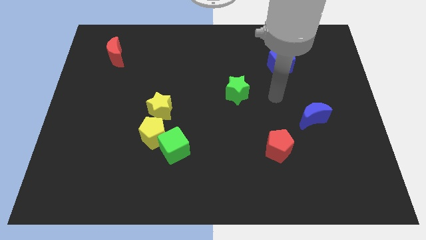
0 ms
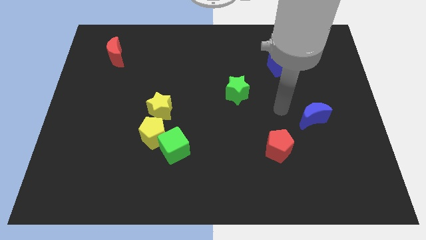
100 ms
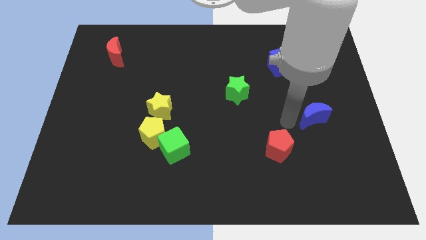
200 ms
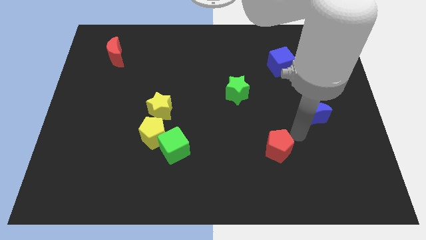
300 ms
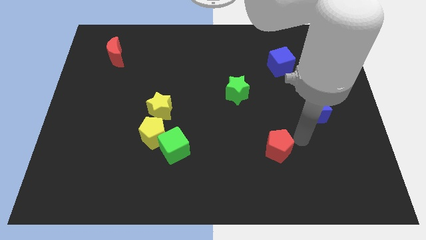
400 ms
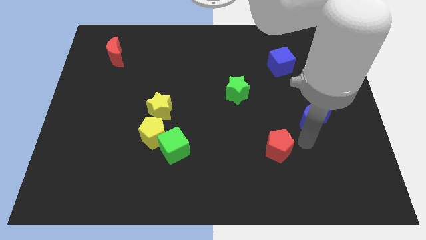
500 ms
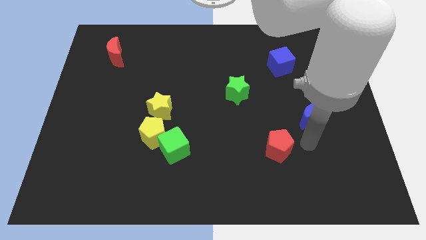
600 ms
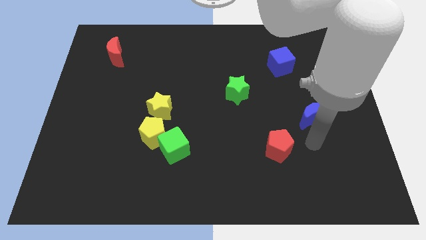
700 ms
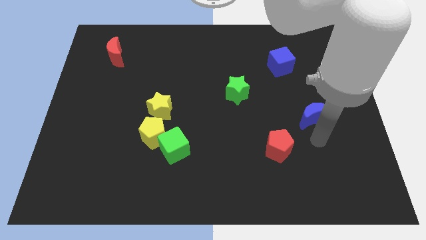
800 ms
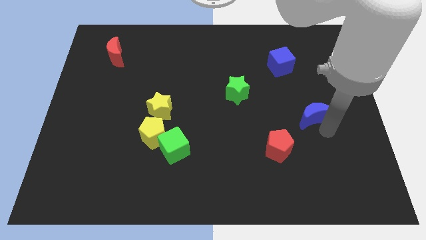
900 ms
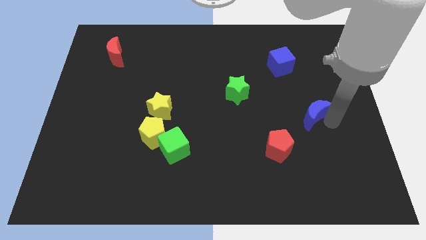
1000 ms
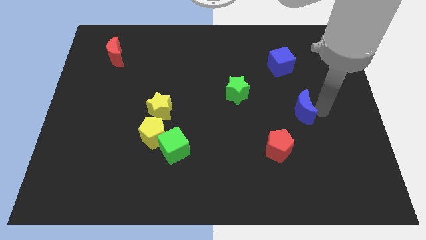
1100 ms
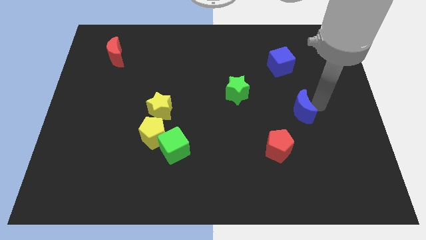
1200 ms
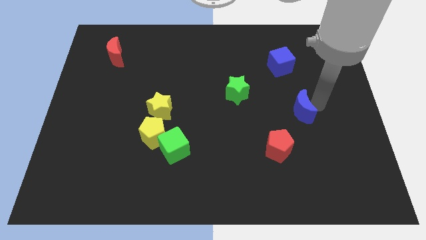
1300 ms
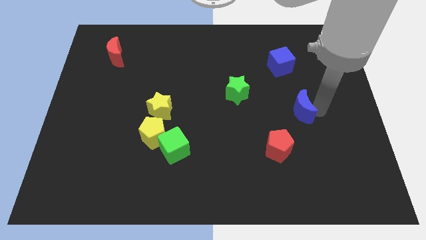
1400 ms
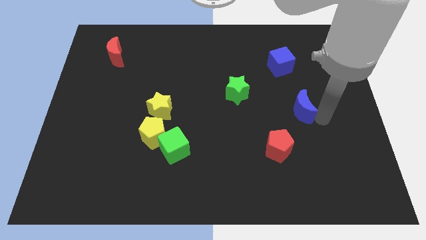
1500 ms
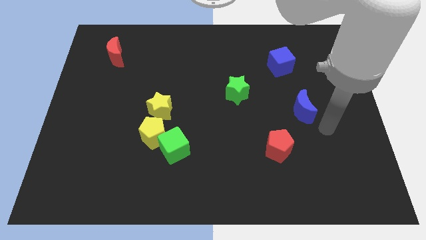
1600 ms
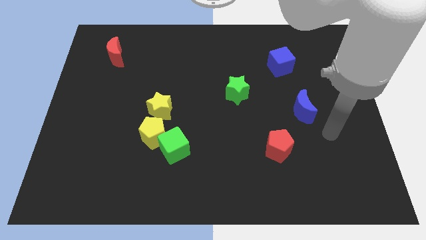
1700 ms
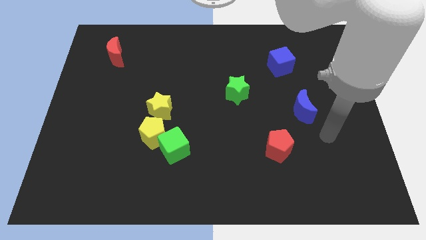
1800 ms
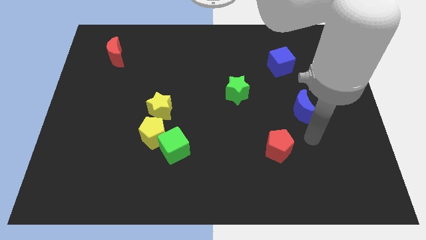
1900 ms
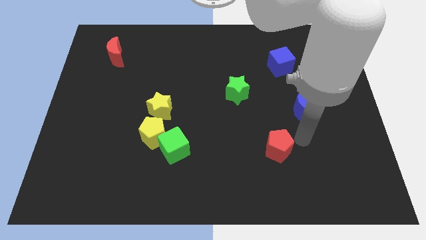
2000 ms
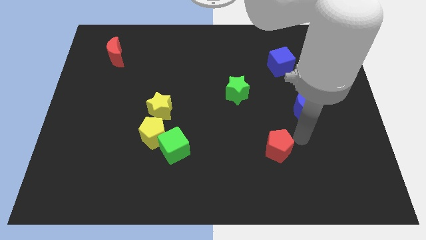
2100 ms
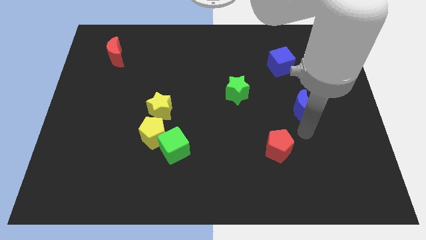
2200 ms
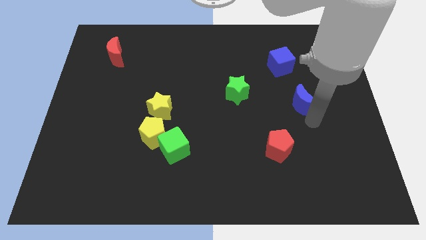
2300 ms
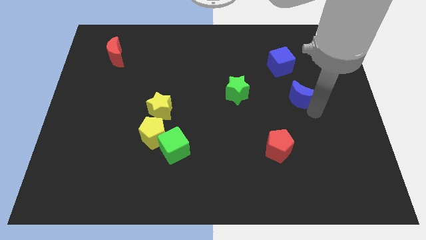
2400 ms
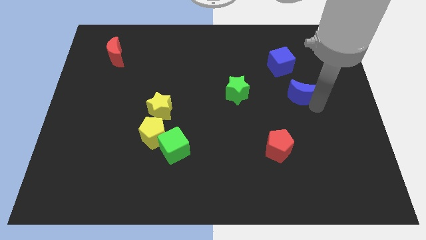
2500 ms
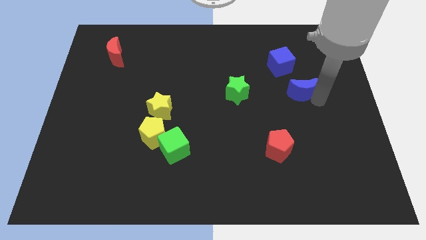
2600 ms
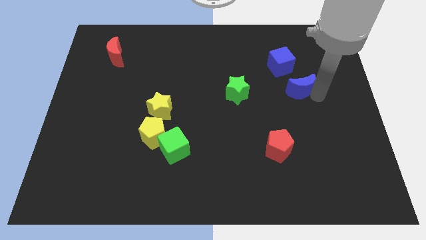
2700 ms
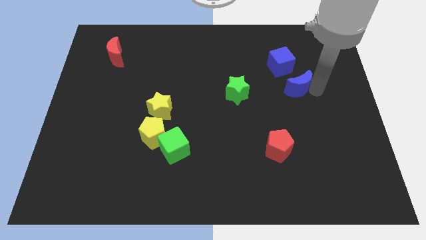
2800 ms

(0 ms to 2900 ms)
move blue moon towards blue blue cube

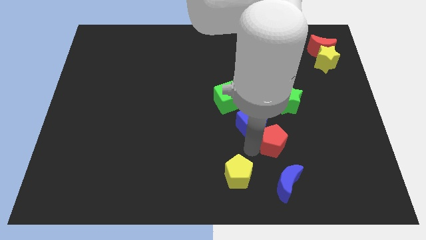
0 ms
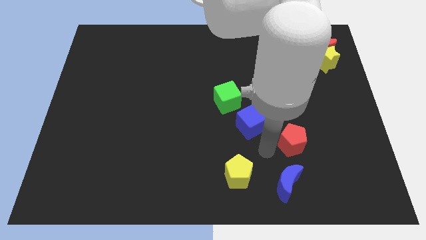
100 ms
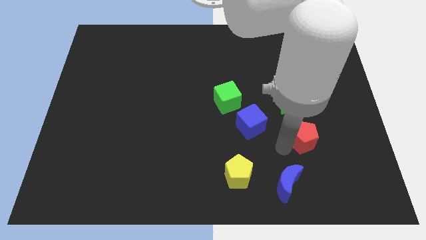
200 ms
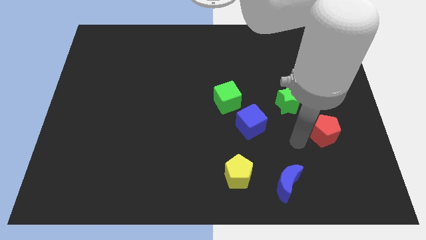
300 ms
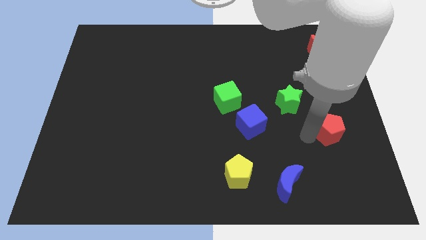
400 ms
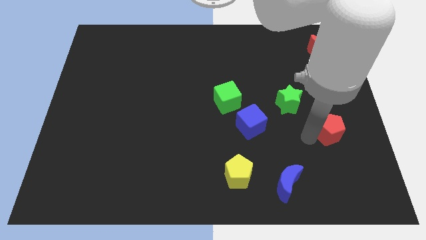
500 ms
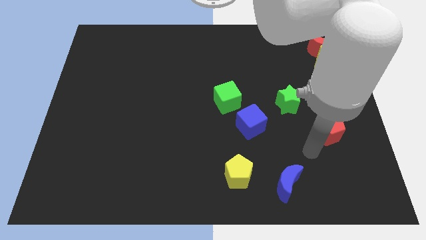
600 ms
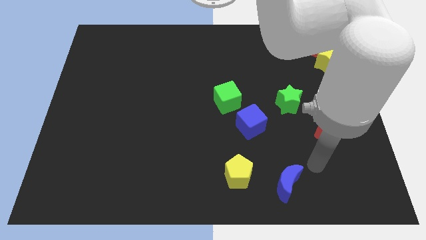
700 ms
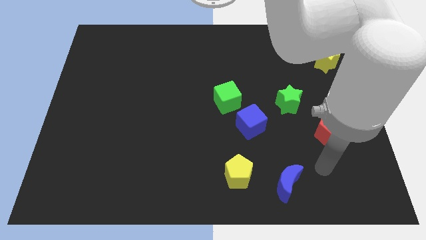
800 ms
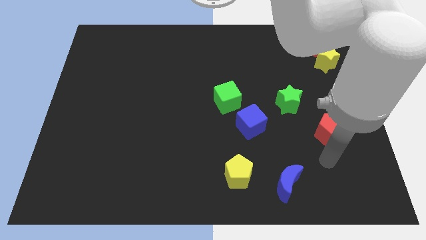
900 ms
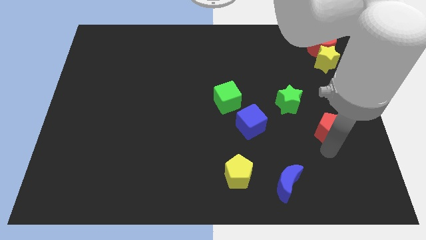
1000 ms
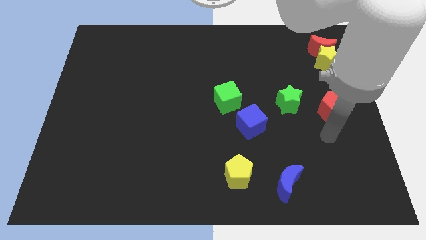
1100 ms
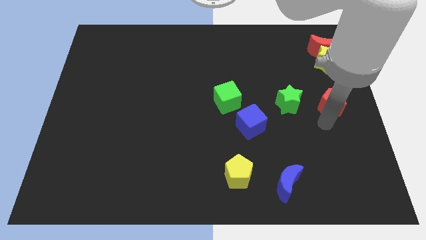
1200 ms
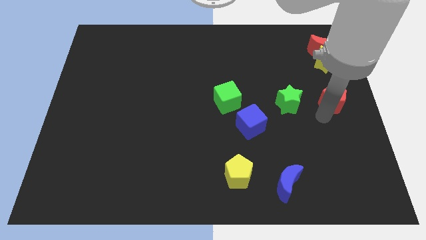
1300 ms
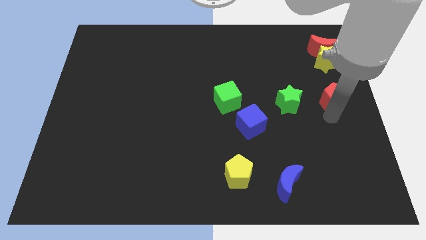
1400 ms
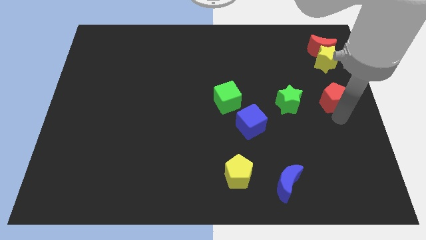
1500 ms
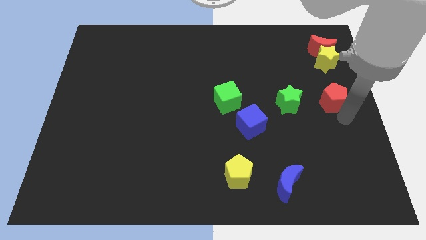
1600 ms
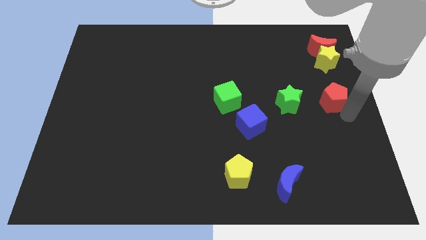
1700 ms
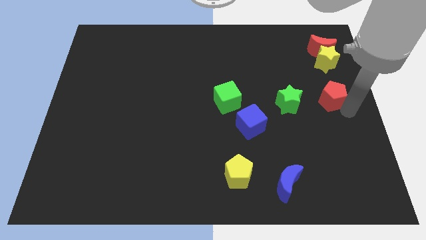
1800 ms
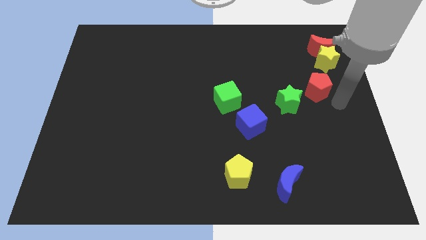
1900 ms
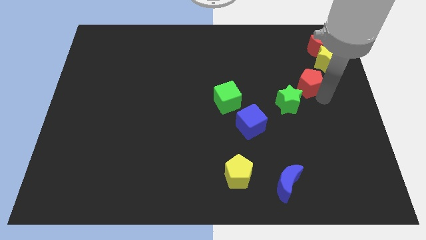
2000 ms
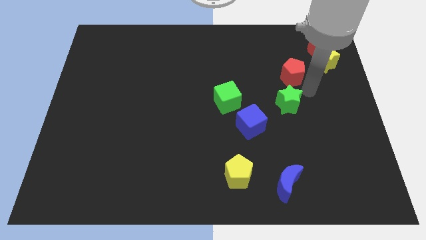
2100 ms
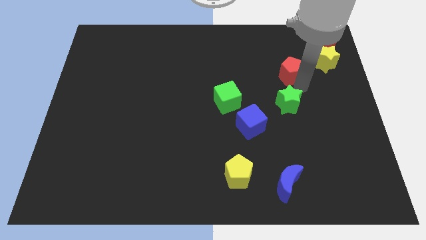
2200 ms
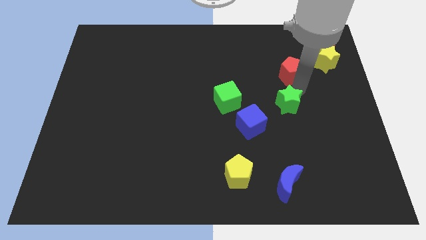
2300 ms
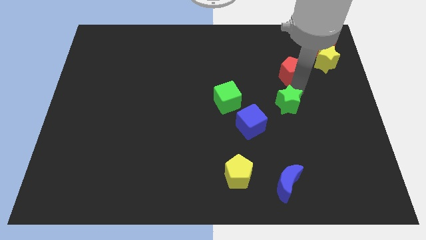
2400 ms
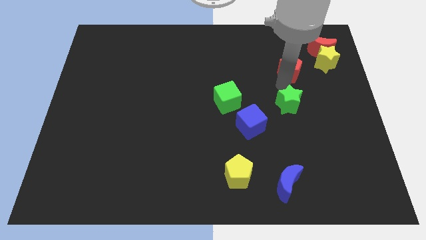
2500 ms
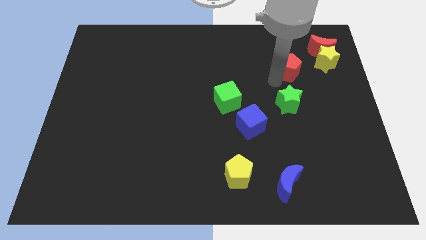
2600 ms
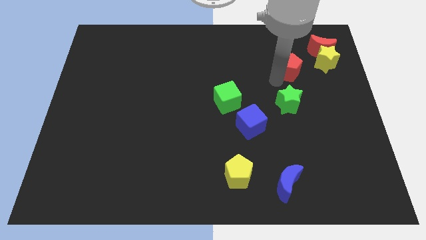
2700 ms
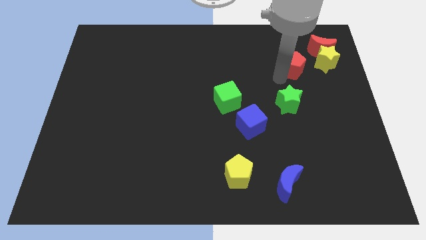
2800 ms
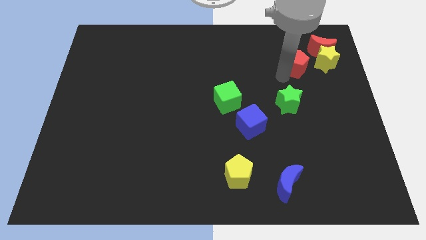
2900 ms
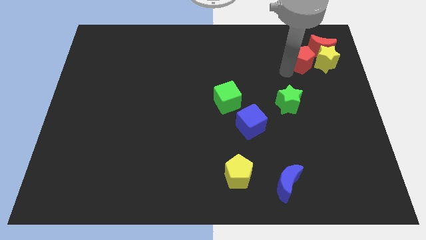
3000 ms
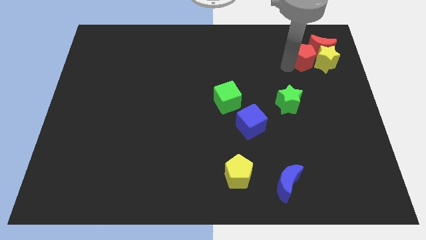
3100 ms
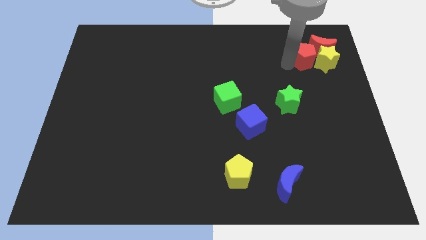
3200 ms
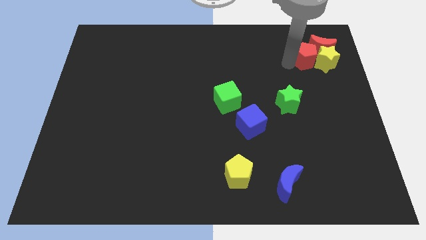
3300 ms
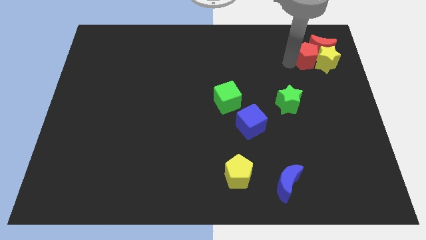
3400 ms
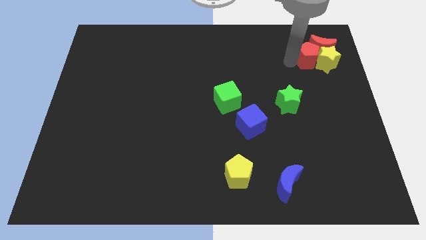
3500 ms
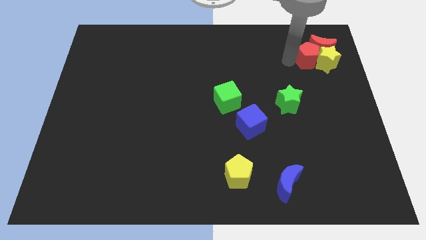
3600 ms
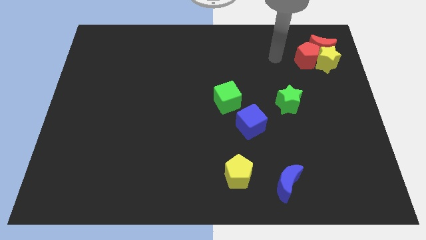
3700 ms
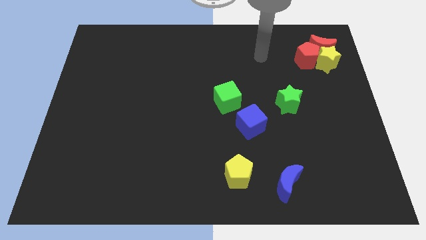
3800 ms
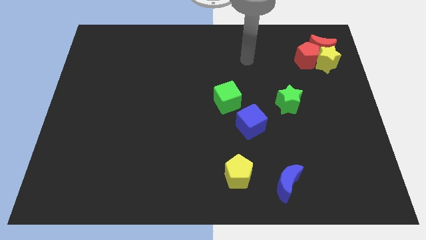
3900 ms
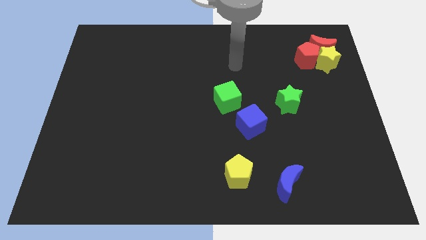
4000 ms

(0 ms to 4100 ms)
move red pentagon towards top right

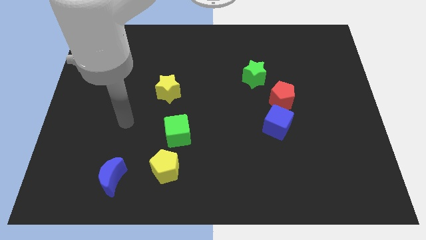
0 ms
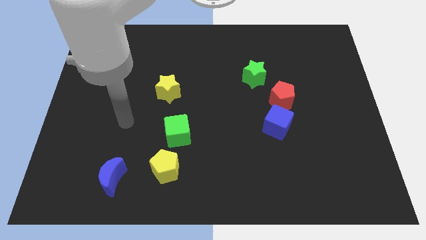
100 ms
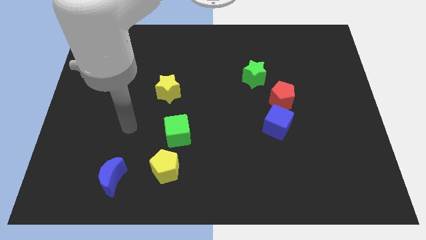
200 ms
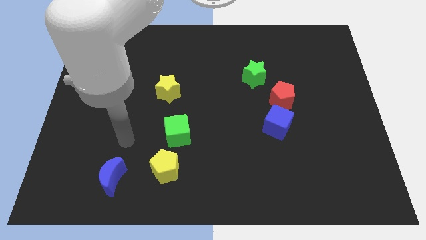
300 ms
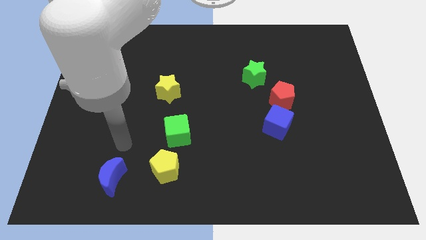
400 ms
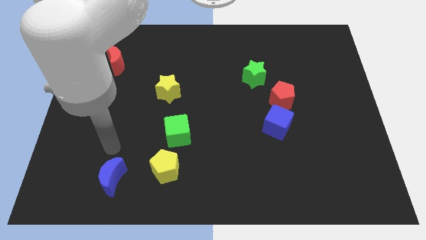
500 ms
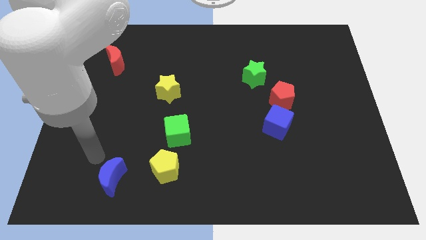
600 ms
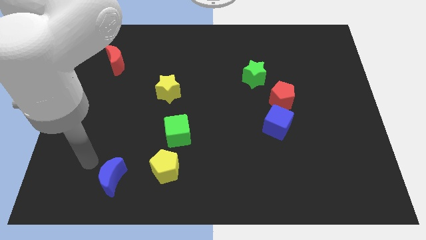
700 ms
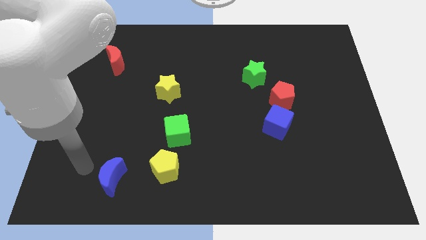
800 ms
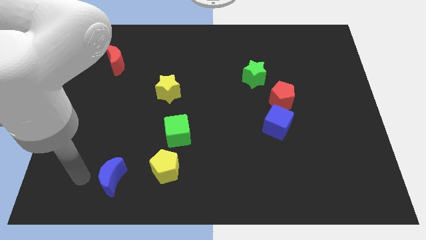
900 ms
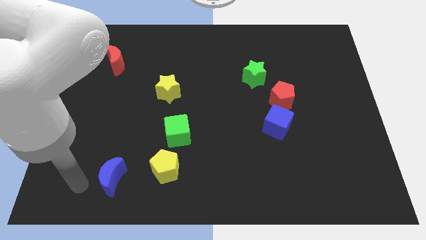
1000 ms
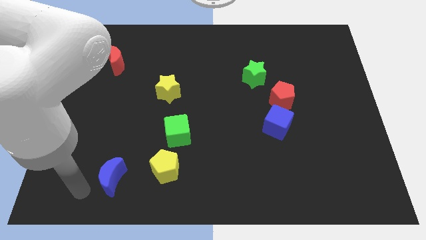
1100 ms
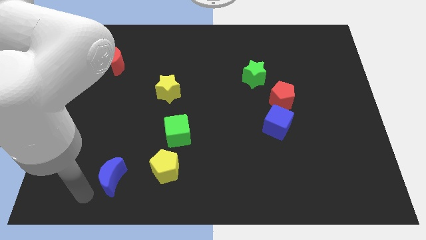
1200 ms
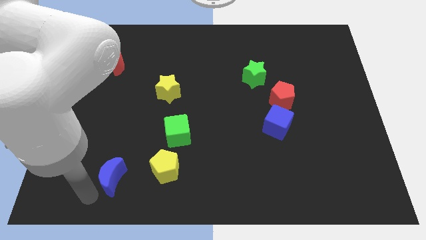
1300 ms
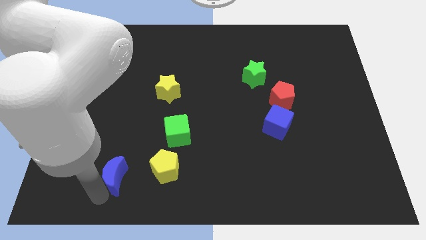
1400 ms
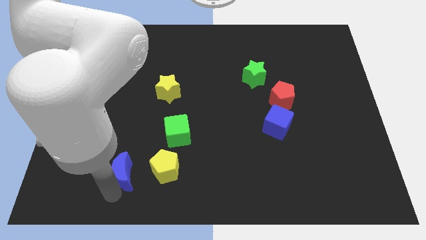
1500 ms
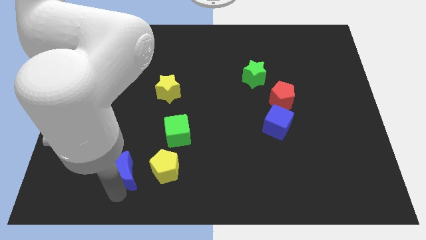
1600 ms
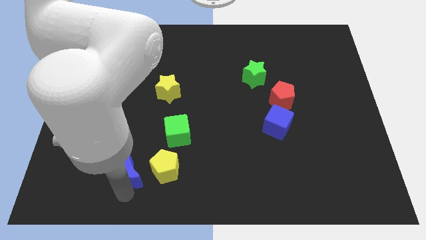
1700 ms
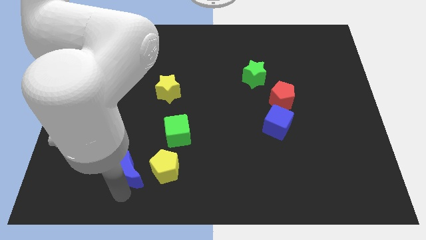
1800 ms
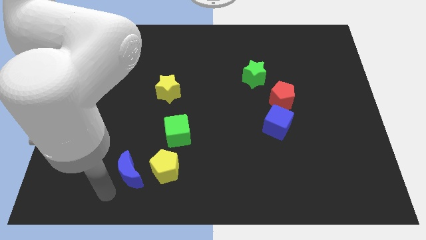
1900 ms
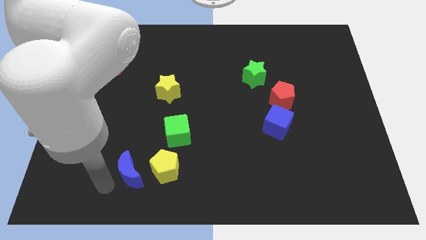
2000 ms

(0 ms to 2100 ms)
move the blue moon slightly to the right
